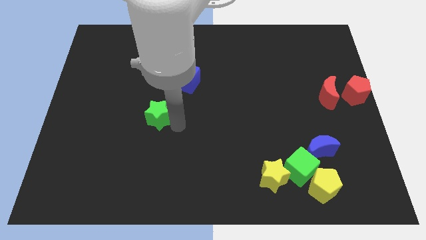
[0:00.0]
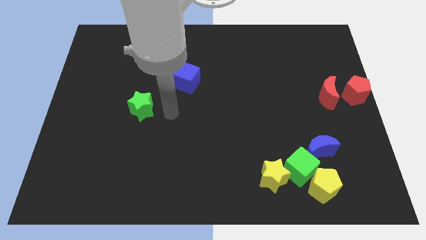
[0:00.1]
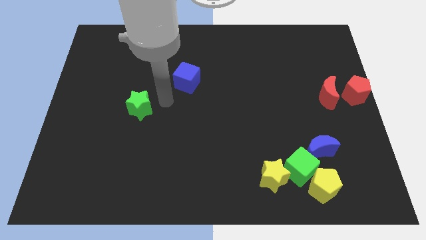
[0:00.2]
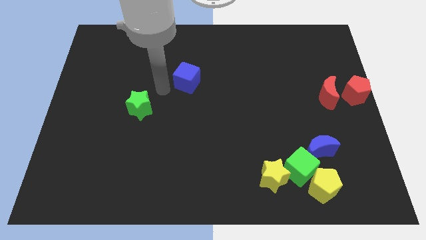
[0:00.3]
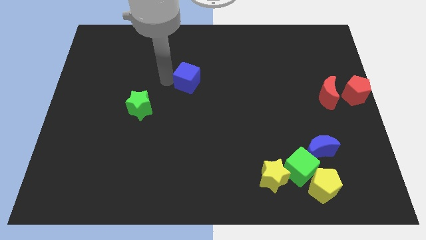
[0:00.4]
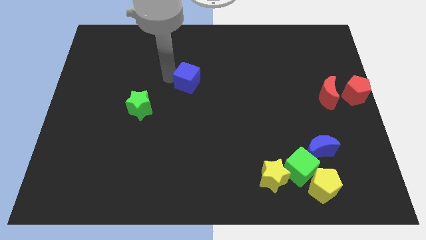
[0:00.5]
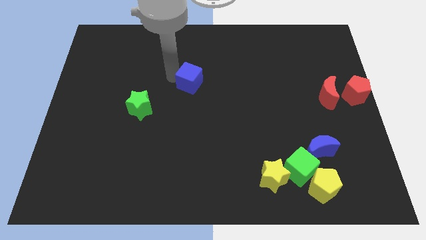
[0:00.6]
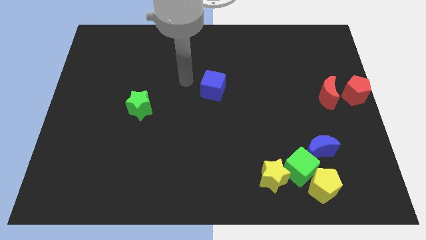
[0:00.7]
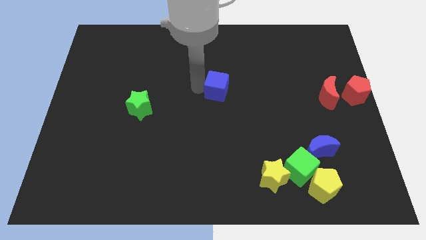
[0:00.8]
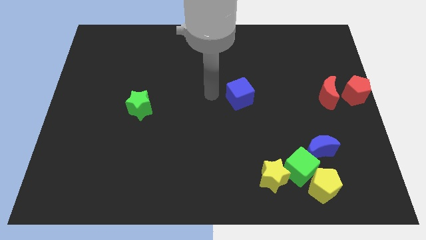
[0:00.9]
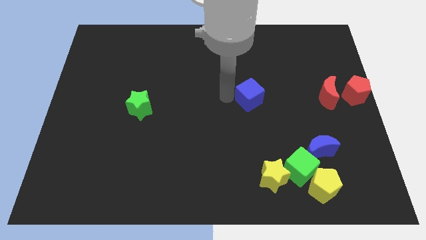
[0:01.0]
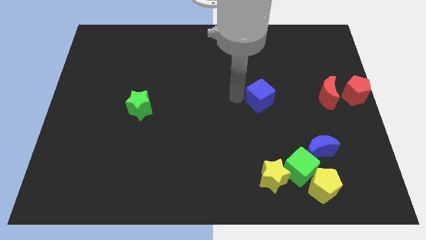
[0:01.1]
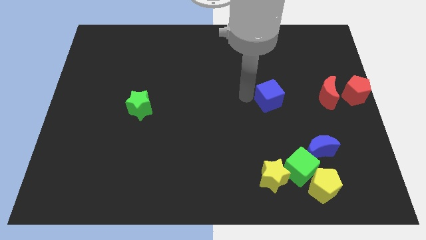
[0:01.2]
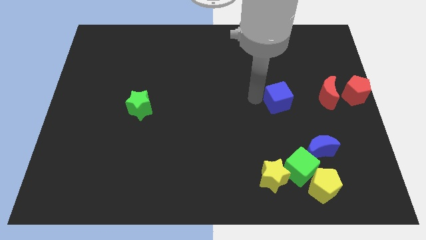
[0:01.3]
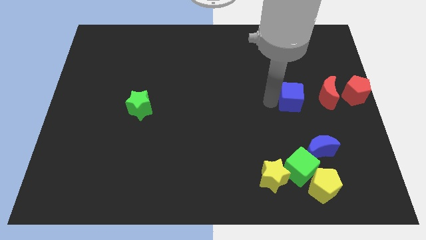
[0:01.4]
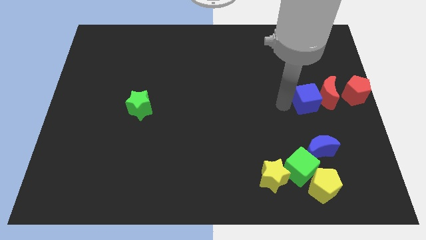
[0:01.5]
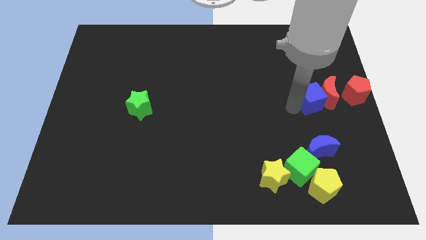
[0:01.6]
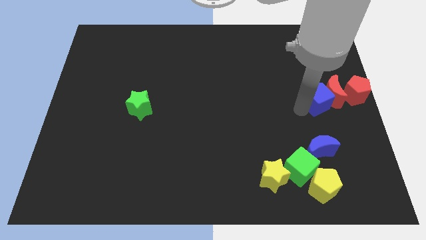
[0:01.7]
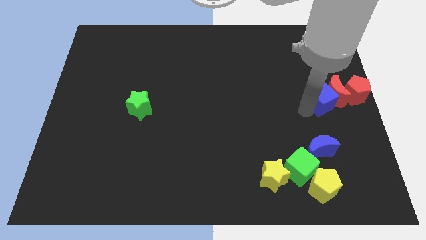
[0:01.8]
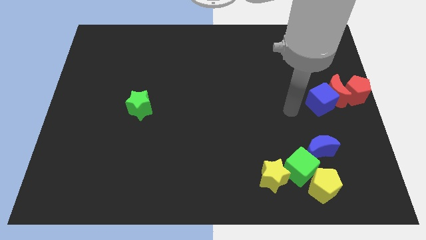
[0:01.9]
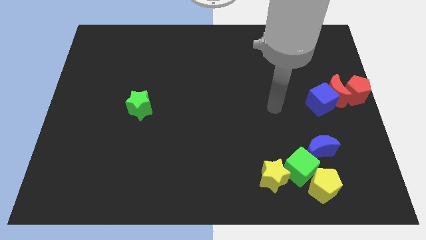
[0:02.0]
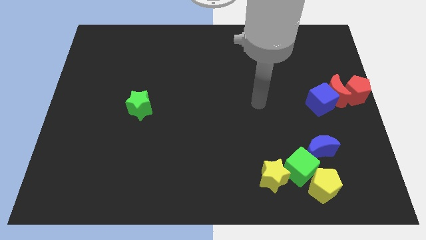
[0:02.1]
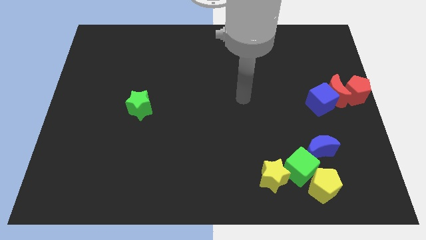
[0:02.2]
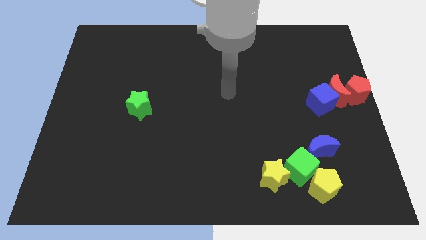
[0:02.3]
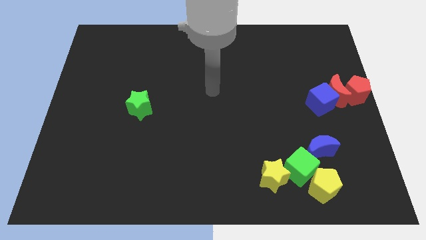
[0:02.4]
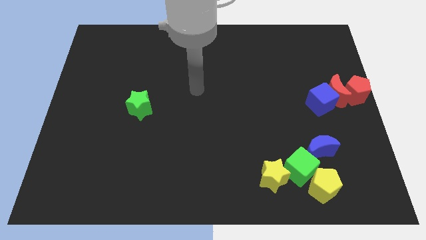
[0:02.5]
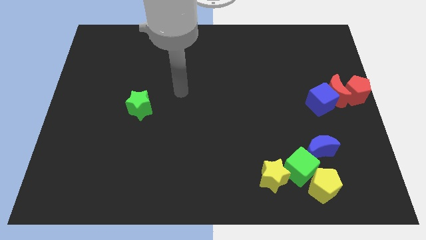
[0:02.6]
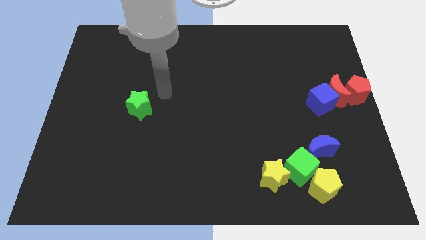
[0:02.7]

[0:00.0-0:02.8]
push the blue cube into the red crescent

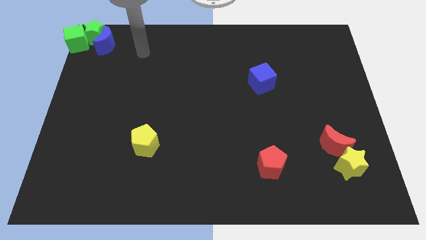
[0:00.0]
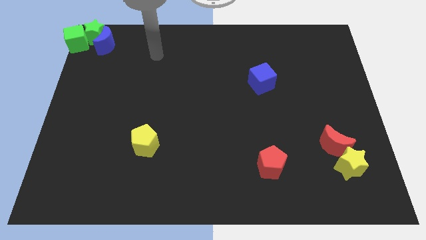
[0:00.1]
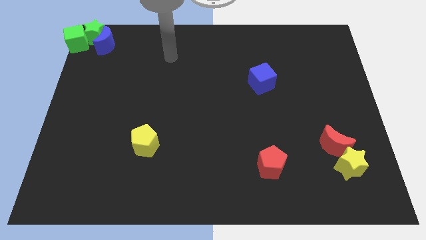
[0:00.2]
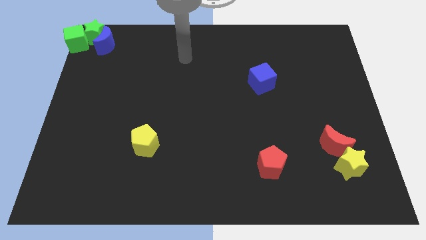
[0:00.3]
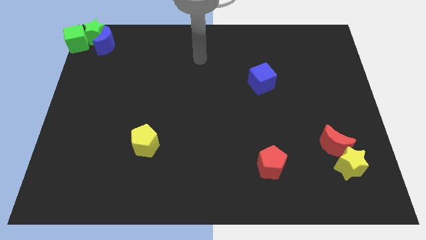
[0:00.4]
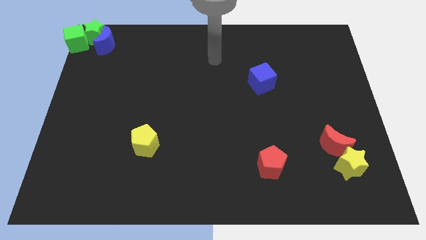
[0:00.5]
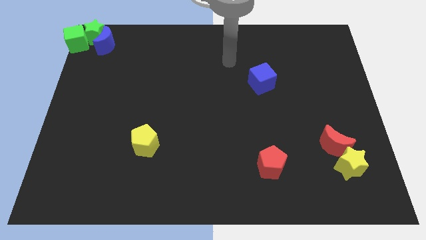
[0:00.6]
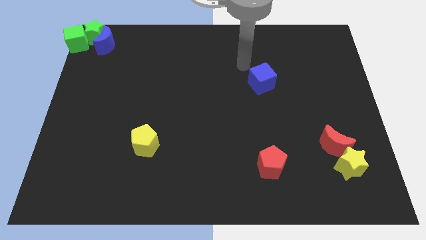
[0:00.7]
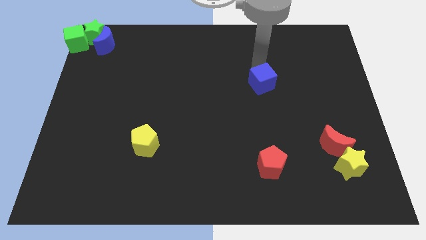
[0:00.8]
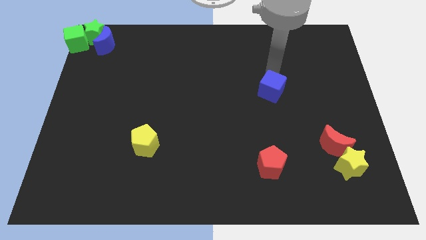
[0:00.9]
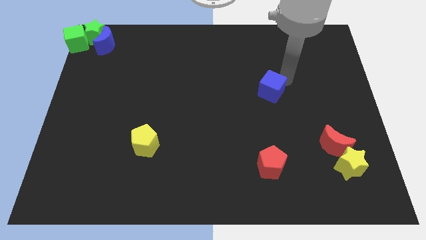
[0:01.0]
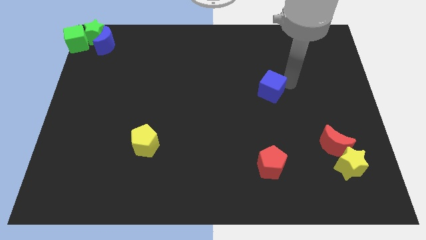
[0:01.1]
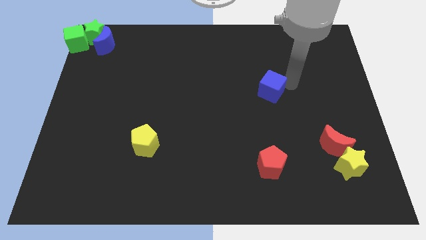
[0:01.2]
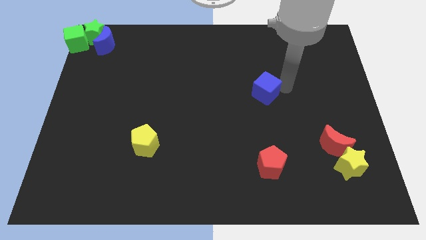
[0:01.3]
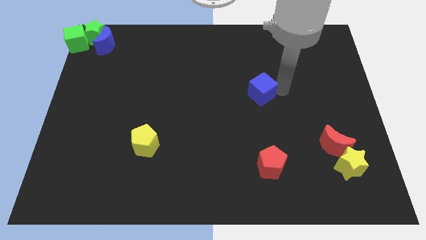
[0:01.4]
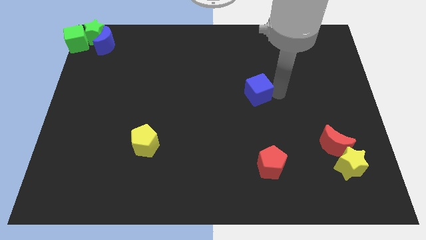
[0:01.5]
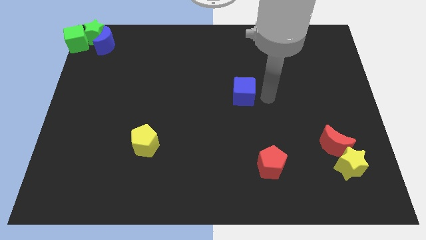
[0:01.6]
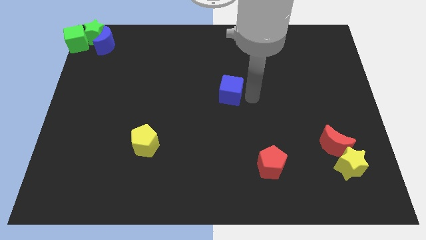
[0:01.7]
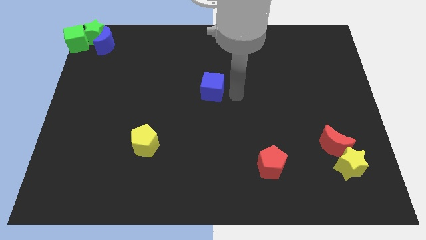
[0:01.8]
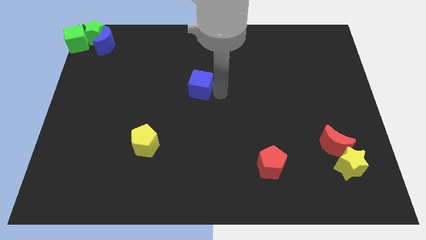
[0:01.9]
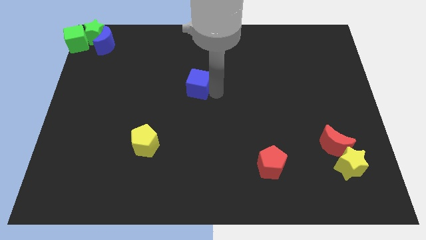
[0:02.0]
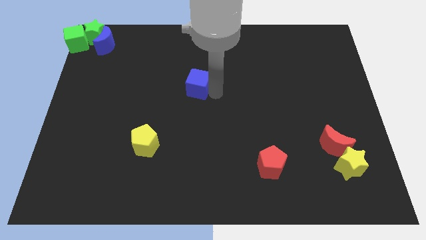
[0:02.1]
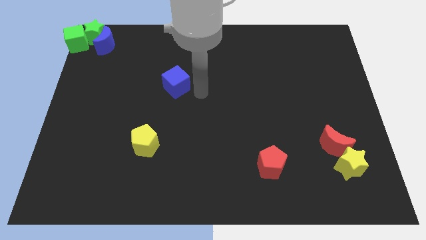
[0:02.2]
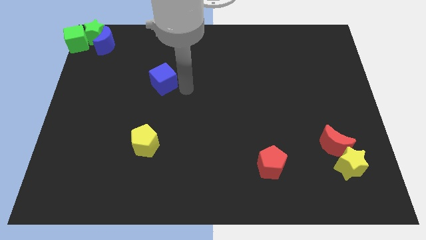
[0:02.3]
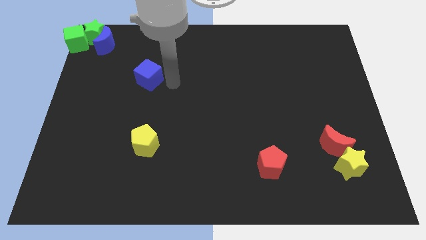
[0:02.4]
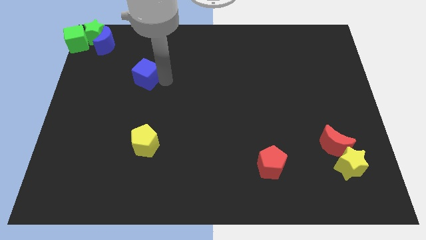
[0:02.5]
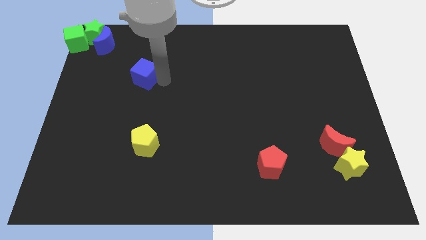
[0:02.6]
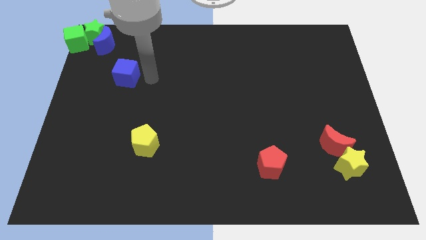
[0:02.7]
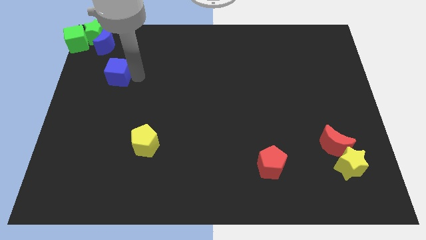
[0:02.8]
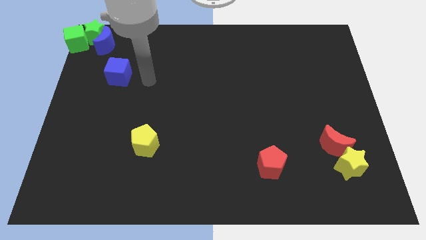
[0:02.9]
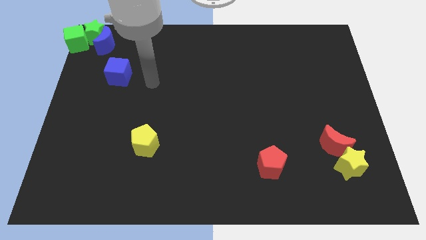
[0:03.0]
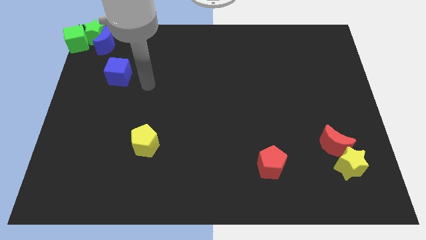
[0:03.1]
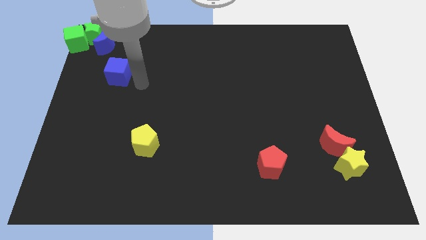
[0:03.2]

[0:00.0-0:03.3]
put the blue cube diagonally in between the blue crescent and yellow pentagon

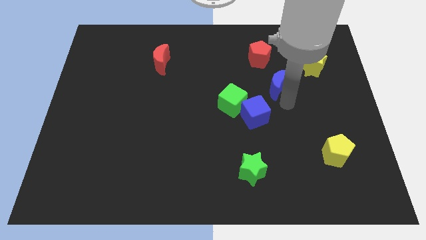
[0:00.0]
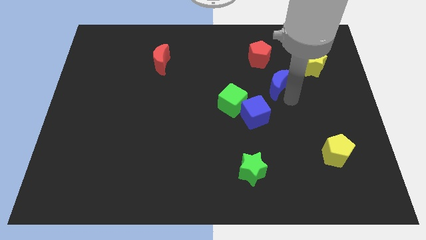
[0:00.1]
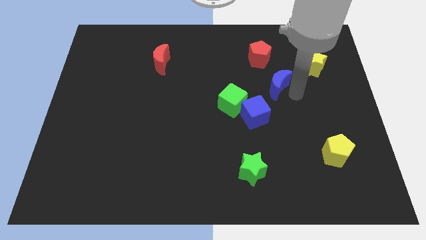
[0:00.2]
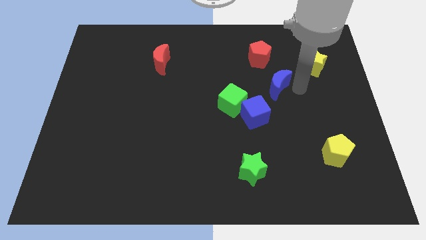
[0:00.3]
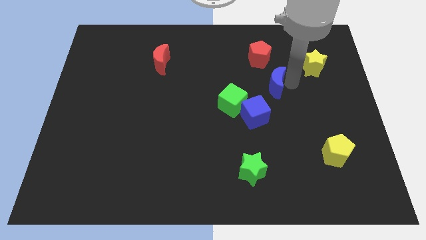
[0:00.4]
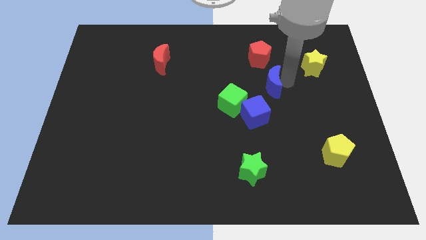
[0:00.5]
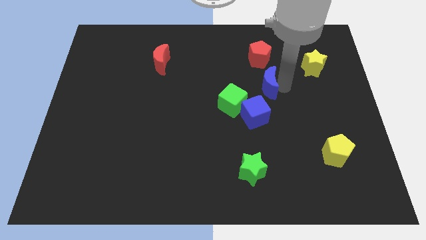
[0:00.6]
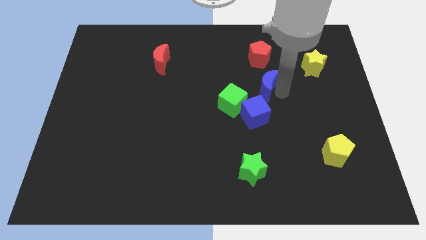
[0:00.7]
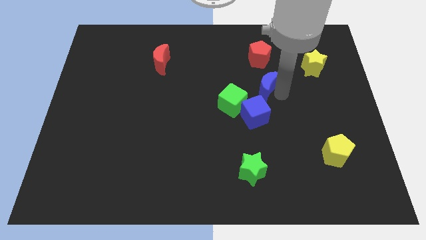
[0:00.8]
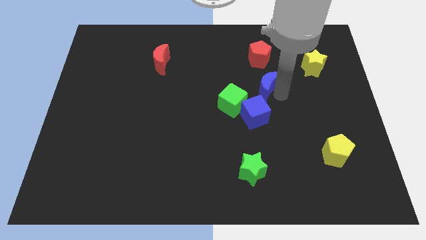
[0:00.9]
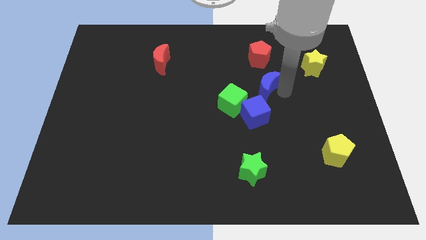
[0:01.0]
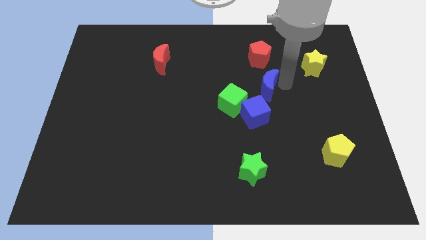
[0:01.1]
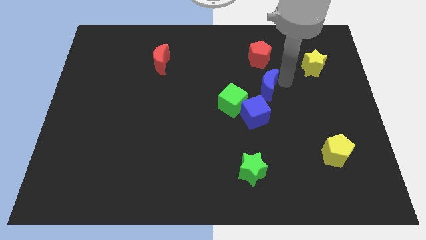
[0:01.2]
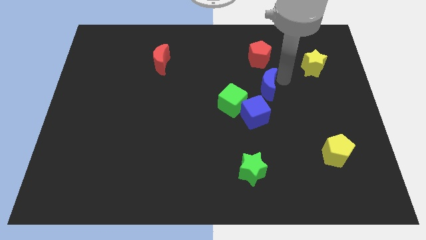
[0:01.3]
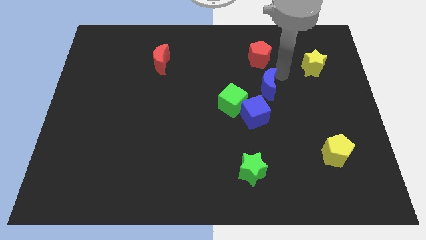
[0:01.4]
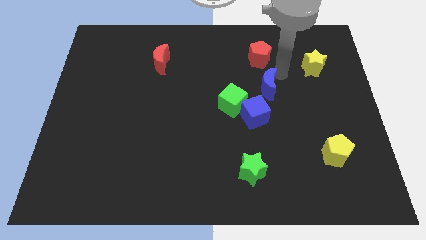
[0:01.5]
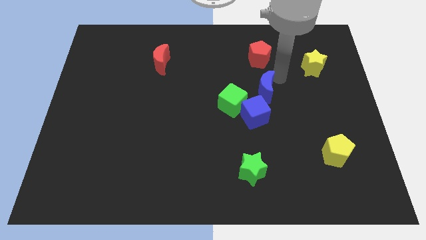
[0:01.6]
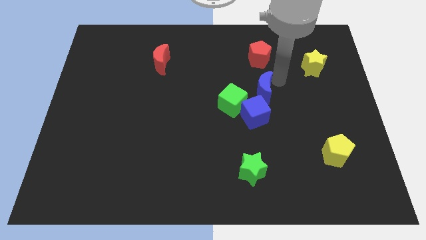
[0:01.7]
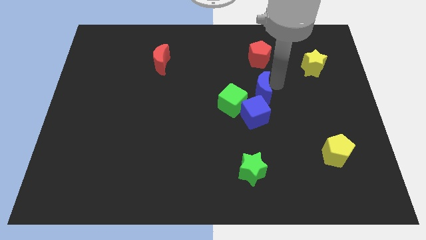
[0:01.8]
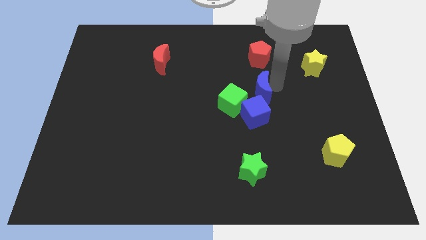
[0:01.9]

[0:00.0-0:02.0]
adjust the blue crescent vertically above the blue cube

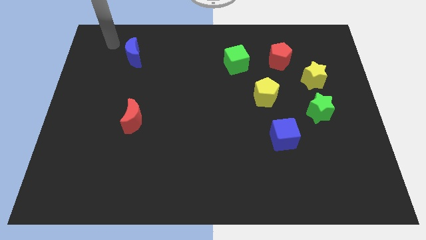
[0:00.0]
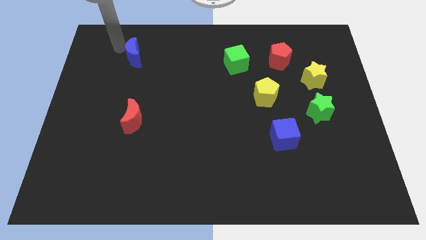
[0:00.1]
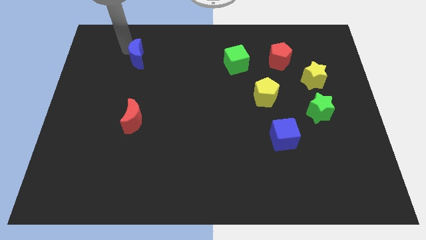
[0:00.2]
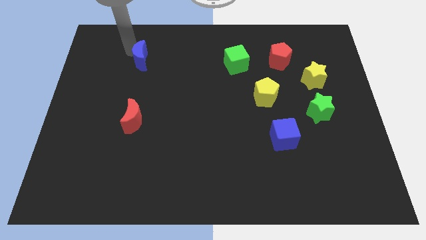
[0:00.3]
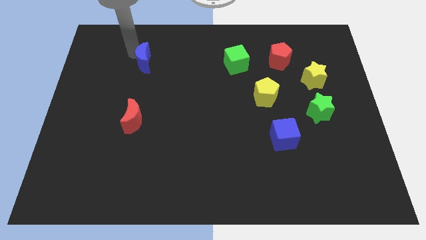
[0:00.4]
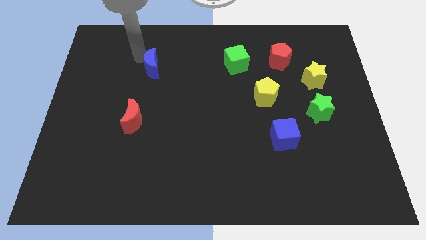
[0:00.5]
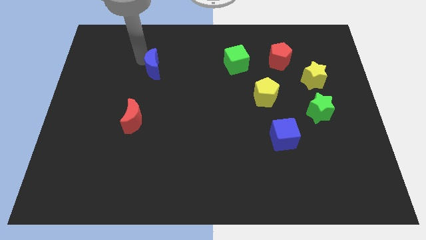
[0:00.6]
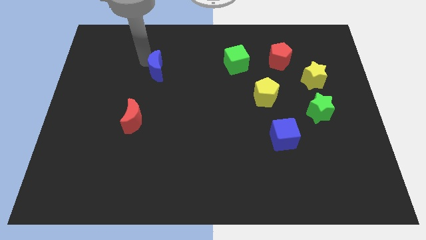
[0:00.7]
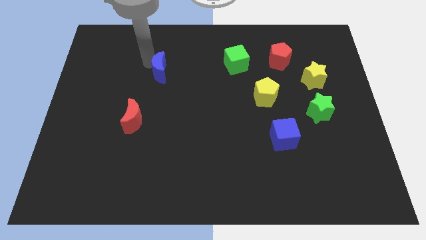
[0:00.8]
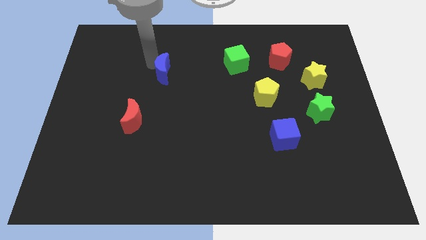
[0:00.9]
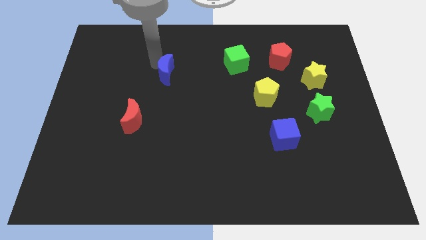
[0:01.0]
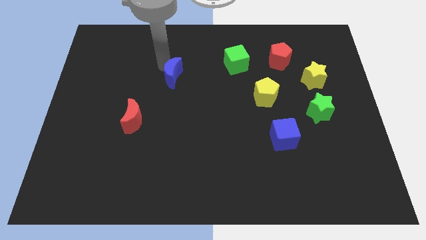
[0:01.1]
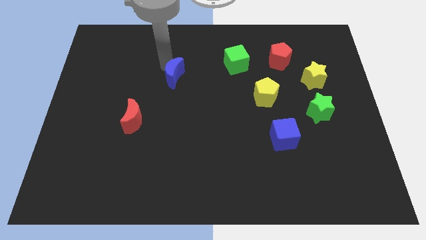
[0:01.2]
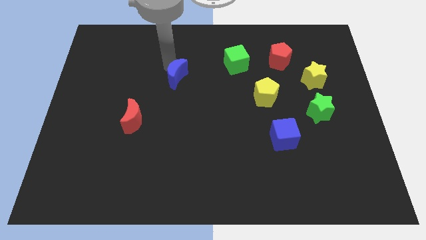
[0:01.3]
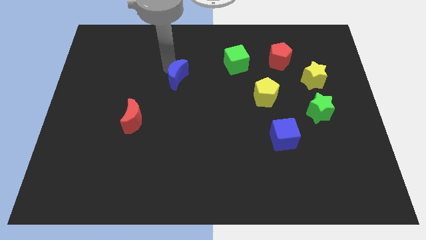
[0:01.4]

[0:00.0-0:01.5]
move the blue crescent to the bottom of the board
